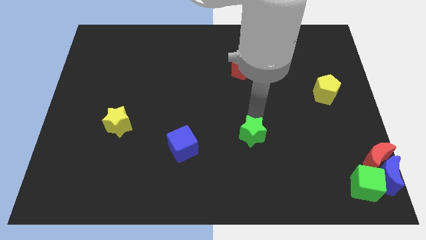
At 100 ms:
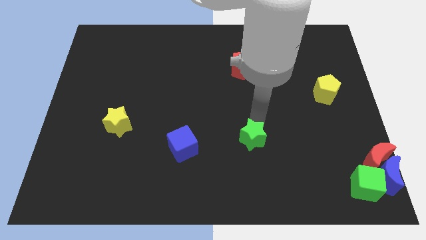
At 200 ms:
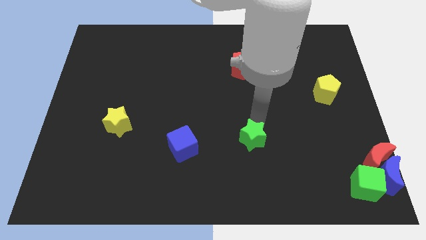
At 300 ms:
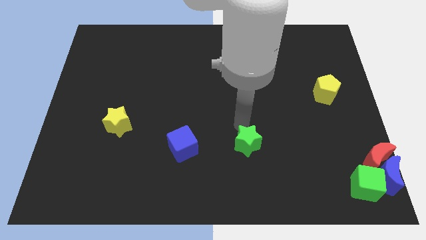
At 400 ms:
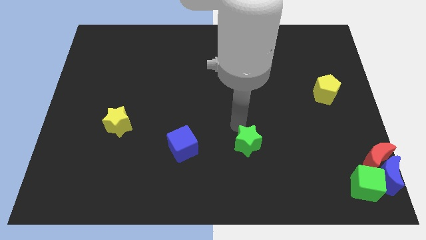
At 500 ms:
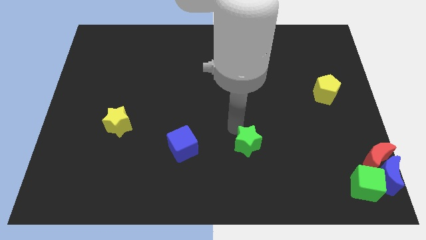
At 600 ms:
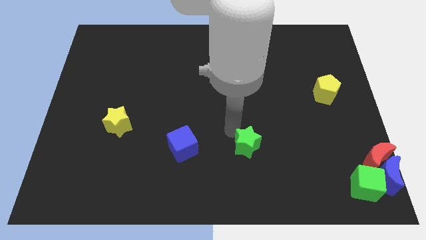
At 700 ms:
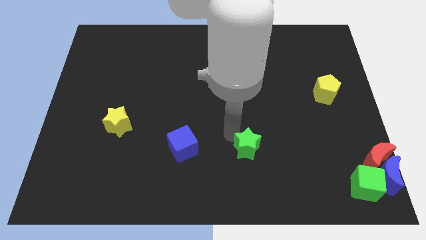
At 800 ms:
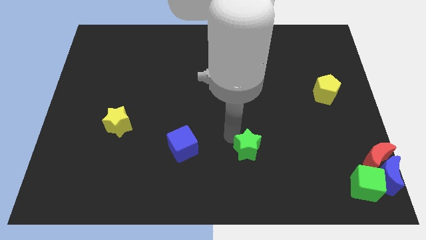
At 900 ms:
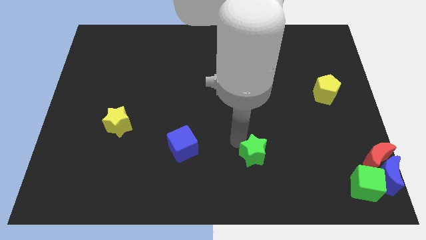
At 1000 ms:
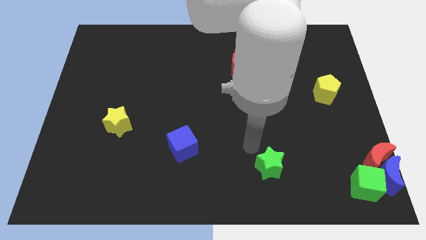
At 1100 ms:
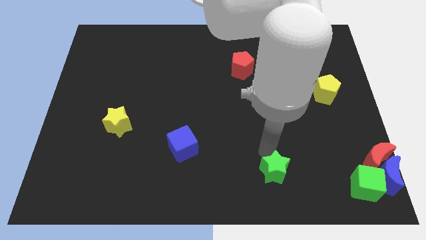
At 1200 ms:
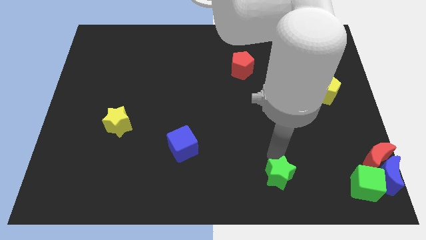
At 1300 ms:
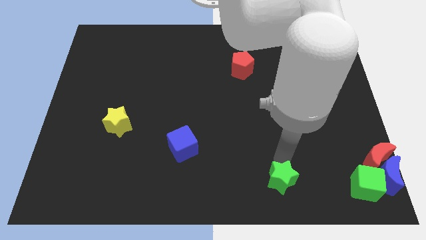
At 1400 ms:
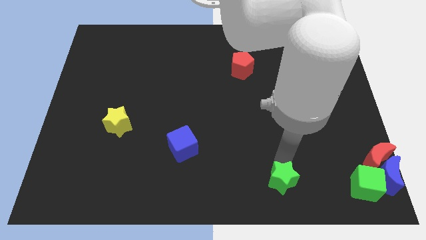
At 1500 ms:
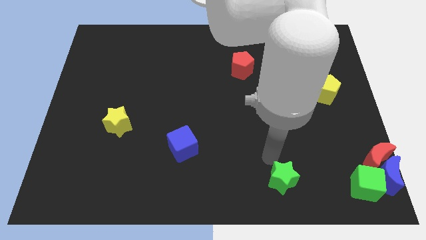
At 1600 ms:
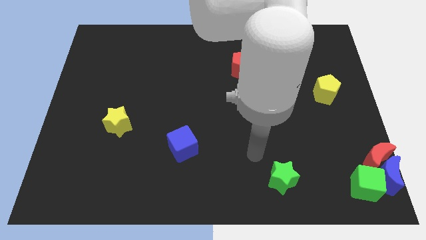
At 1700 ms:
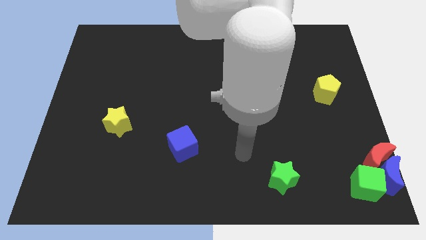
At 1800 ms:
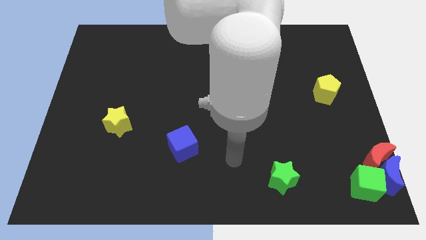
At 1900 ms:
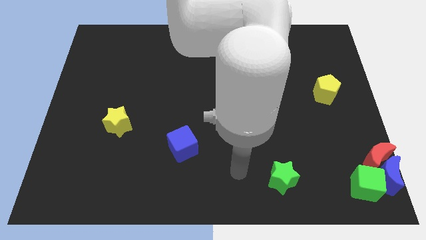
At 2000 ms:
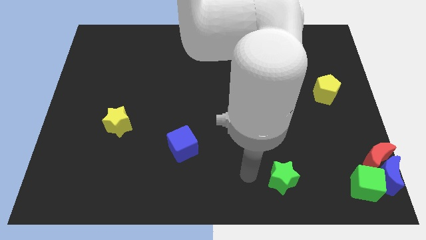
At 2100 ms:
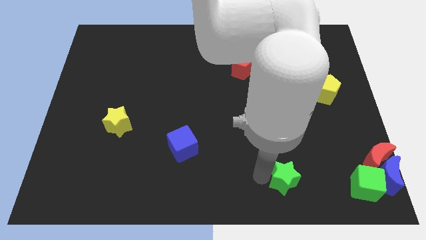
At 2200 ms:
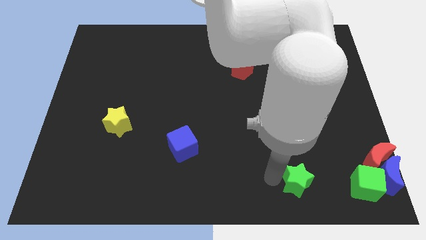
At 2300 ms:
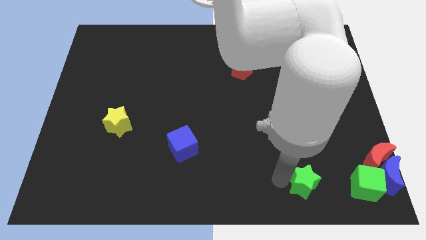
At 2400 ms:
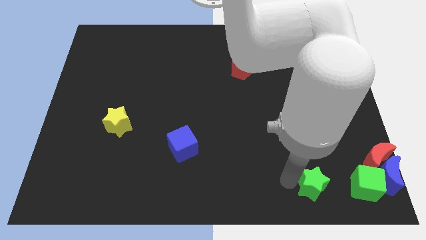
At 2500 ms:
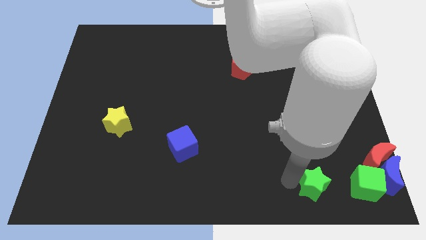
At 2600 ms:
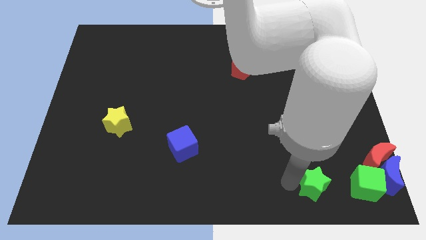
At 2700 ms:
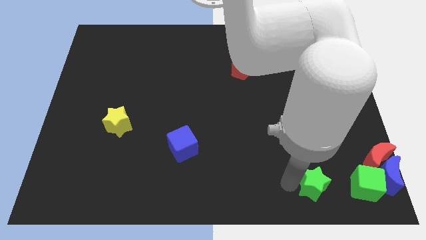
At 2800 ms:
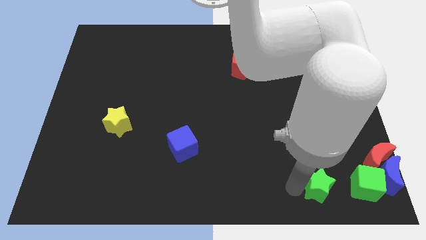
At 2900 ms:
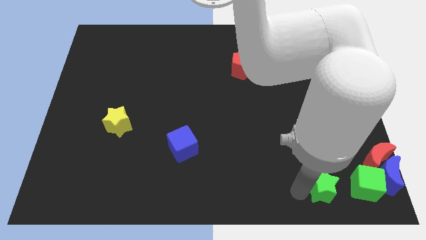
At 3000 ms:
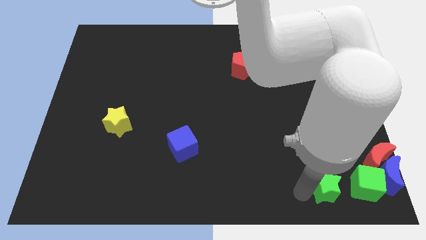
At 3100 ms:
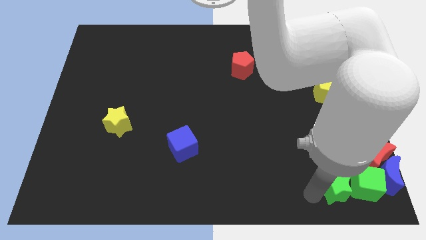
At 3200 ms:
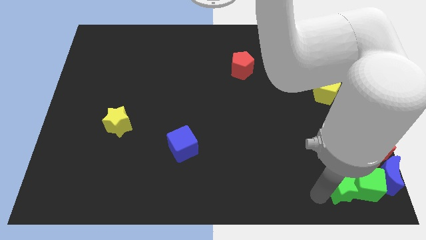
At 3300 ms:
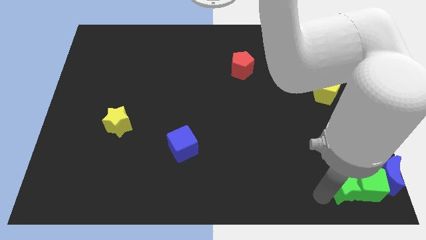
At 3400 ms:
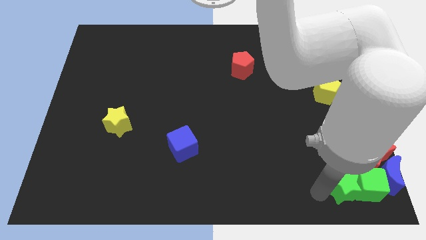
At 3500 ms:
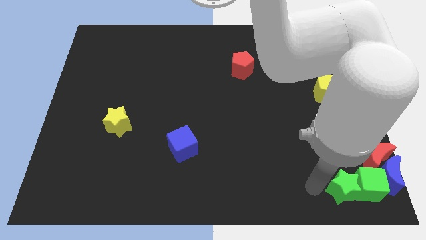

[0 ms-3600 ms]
move green star into green cube

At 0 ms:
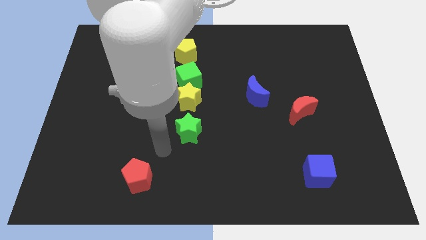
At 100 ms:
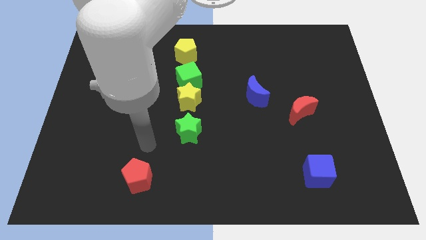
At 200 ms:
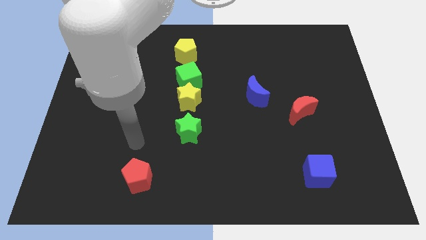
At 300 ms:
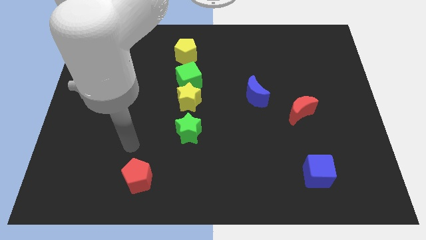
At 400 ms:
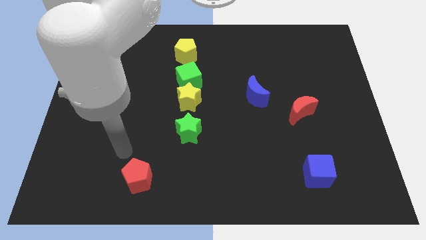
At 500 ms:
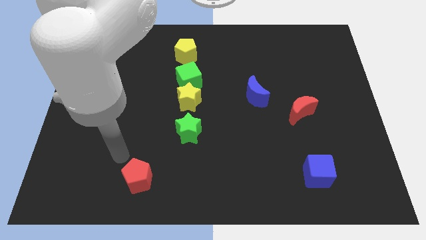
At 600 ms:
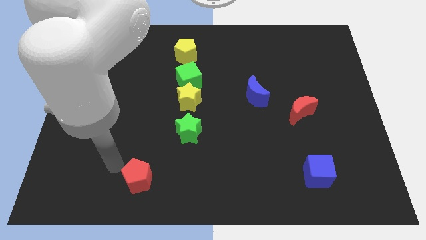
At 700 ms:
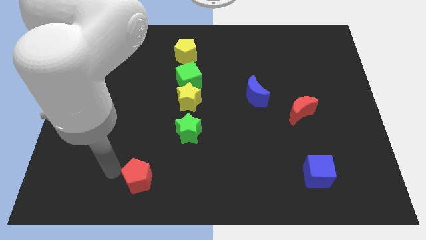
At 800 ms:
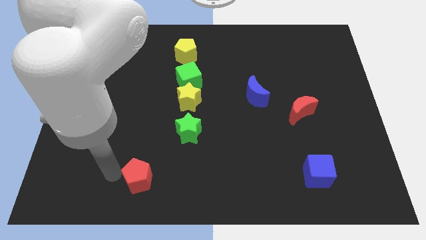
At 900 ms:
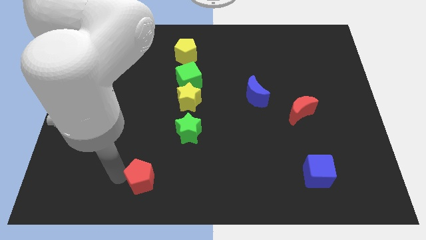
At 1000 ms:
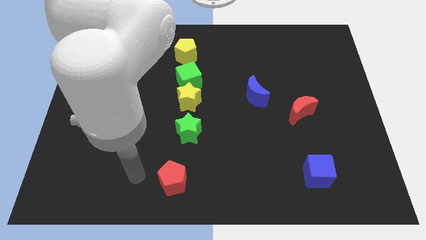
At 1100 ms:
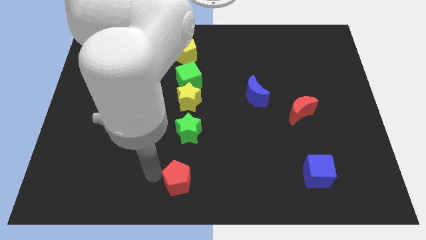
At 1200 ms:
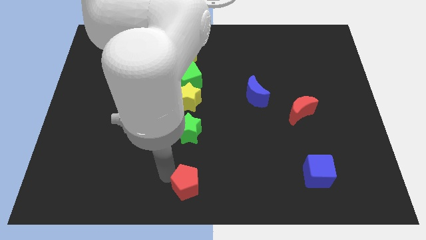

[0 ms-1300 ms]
move the red pentagon to the bottom center

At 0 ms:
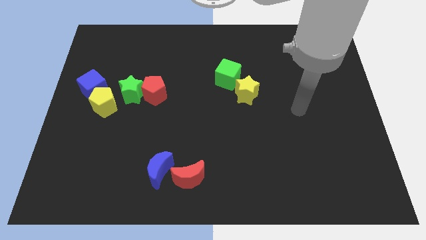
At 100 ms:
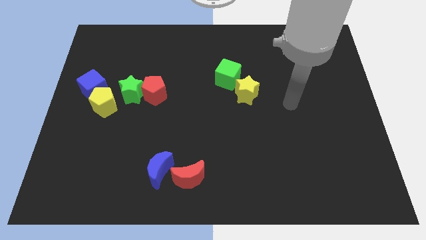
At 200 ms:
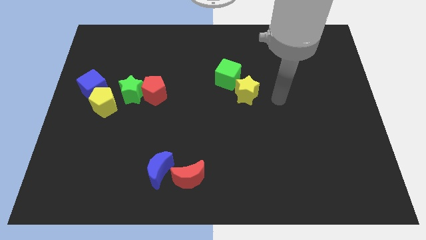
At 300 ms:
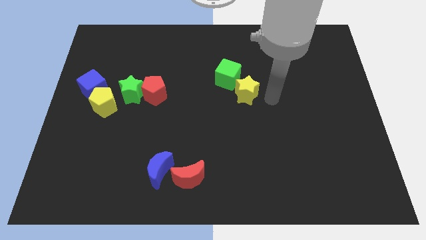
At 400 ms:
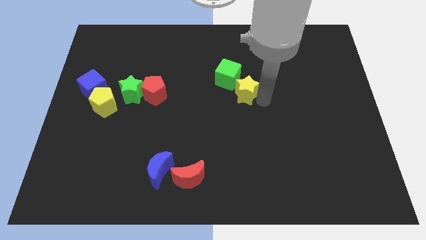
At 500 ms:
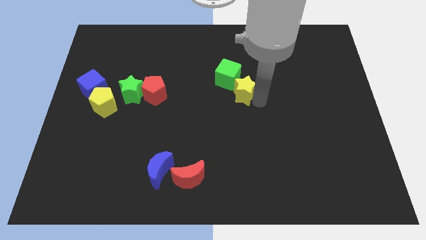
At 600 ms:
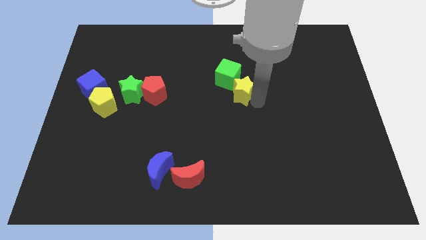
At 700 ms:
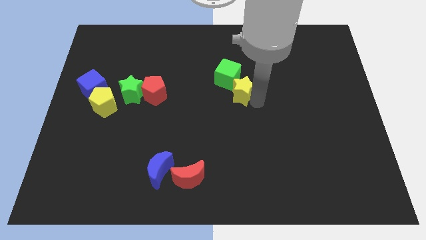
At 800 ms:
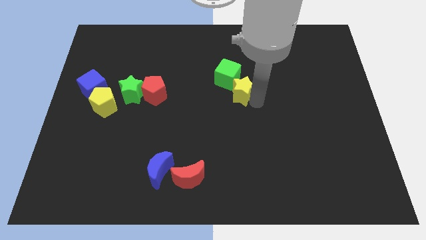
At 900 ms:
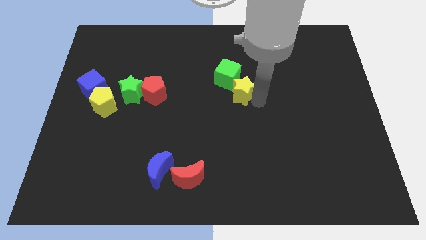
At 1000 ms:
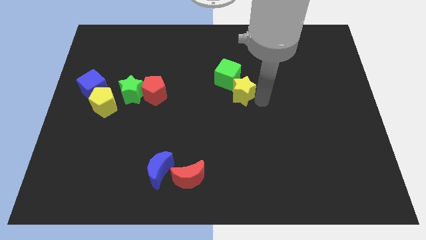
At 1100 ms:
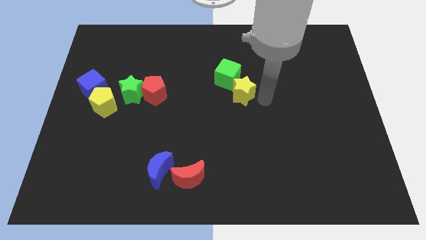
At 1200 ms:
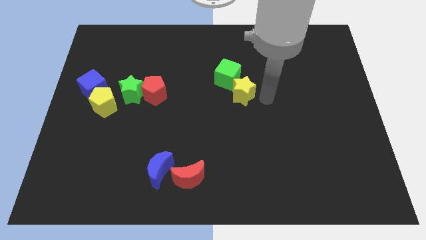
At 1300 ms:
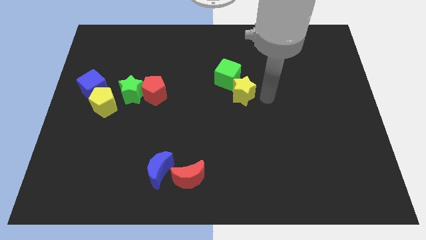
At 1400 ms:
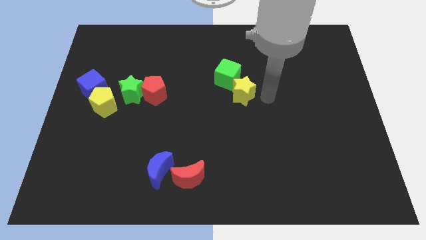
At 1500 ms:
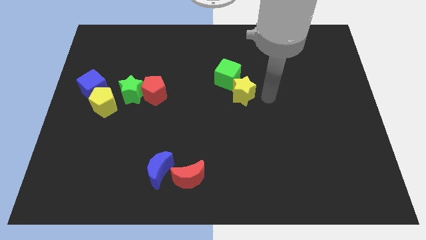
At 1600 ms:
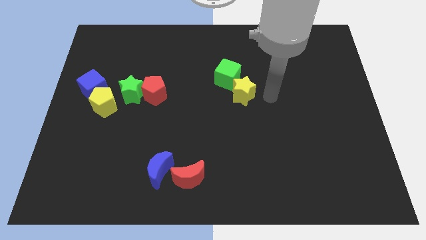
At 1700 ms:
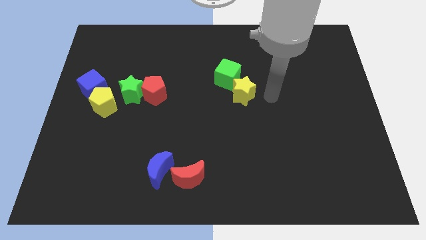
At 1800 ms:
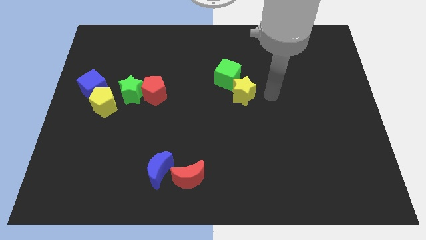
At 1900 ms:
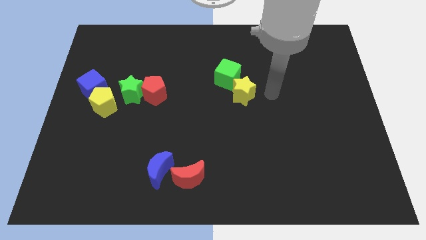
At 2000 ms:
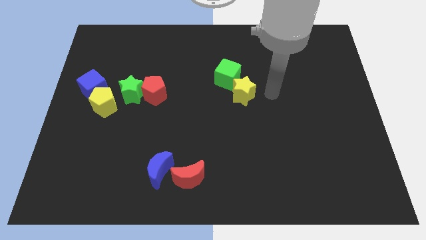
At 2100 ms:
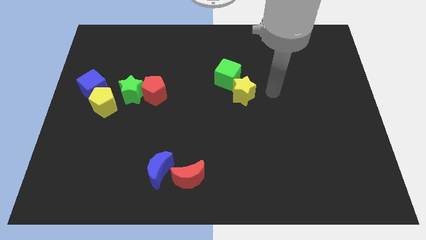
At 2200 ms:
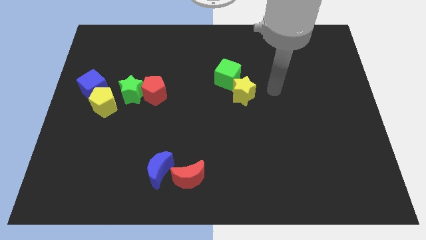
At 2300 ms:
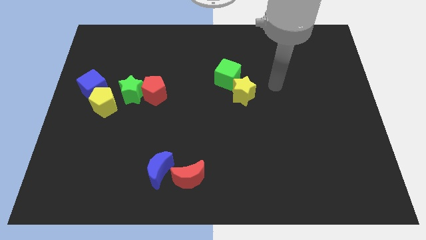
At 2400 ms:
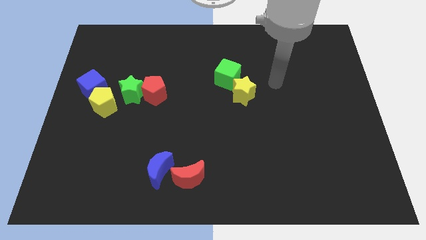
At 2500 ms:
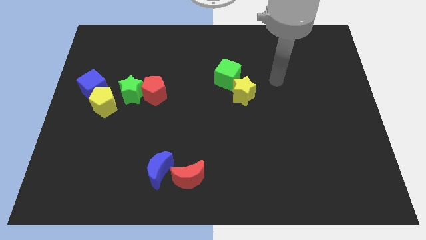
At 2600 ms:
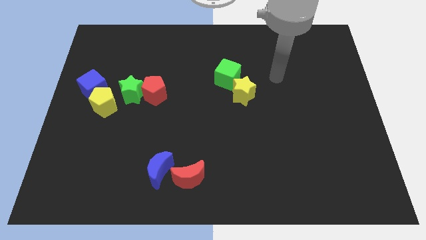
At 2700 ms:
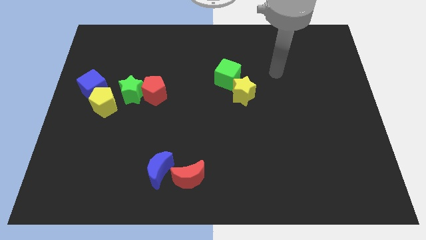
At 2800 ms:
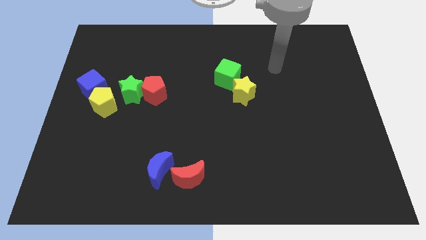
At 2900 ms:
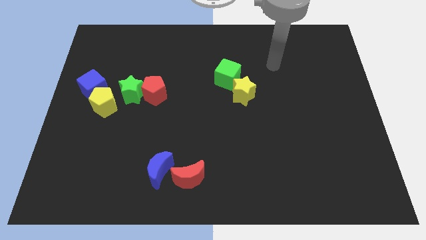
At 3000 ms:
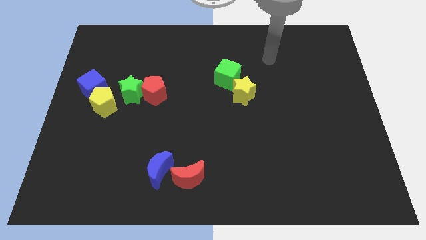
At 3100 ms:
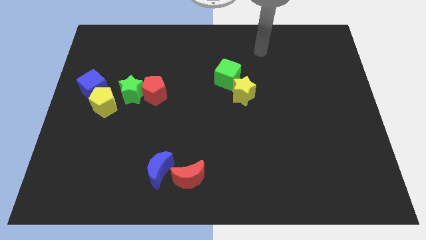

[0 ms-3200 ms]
slightly push the yellow star diagonally bottom right to the green cube

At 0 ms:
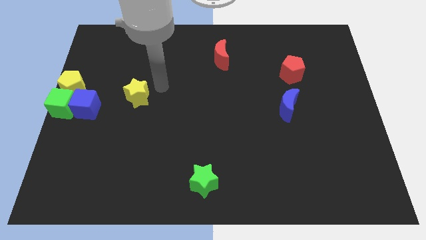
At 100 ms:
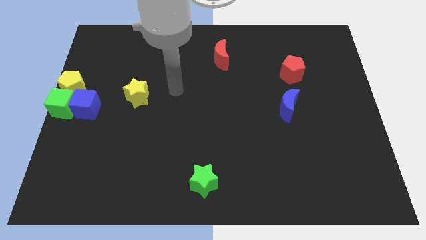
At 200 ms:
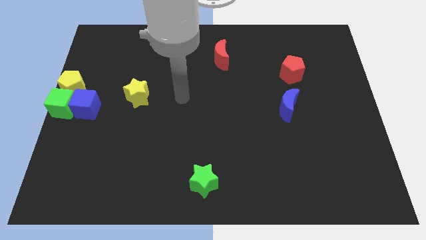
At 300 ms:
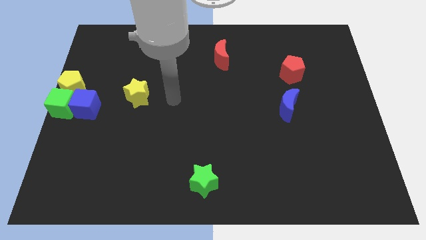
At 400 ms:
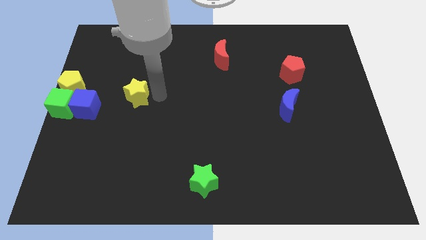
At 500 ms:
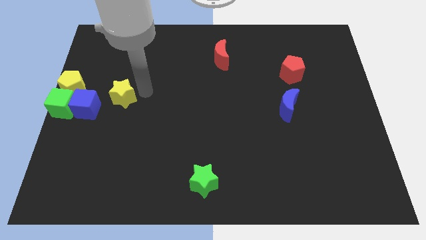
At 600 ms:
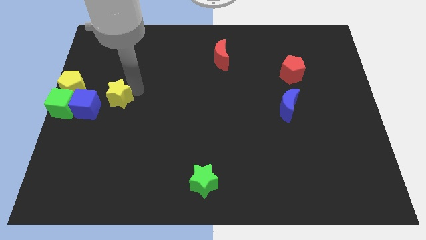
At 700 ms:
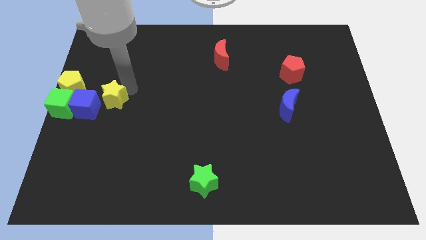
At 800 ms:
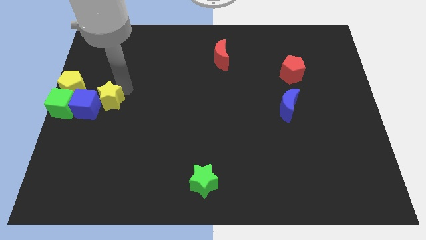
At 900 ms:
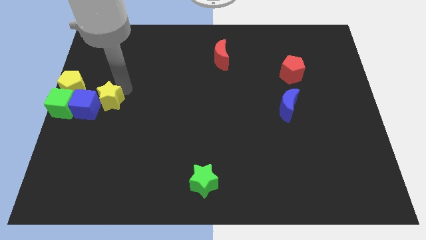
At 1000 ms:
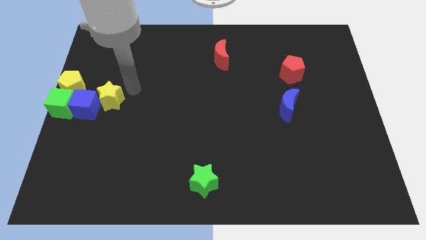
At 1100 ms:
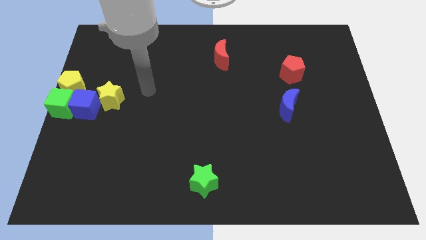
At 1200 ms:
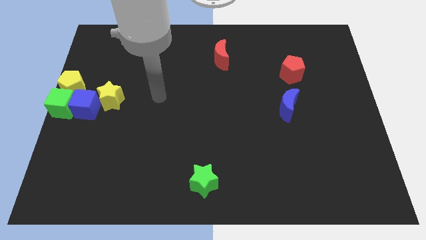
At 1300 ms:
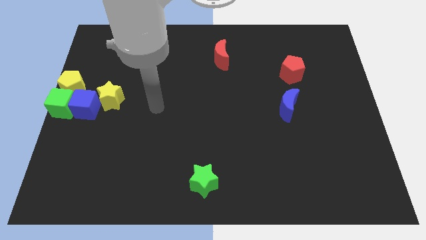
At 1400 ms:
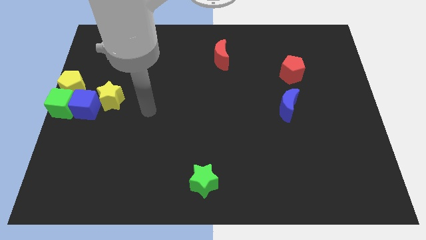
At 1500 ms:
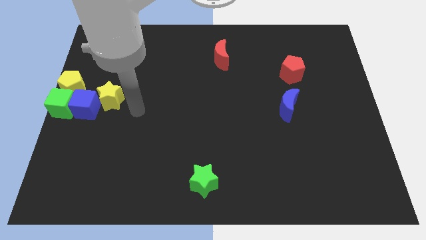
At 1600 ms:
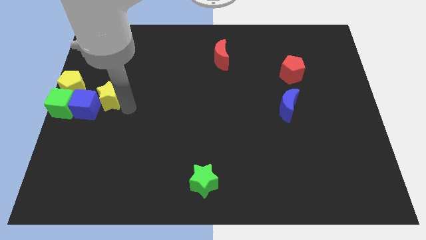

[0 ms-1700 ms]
move the yellow star into the blue cube
